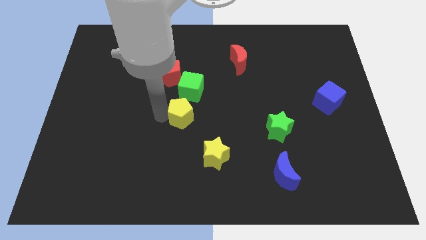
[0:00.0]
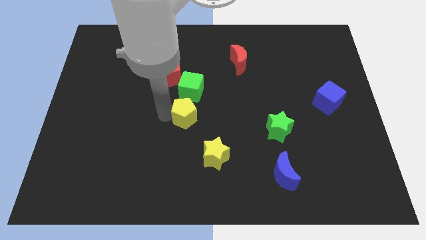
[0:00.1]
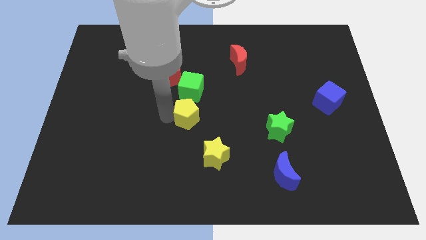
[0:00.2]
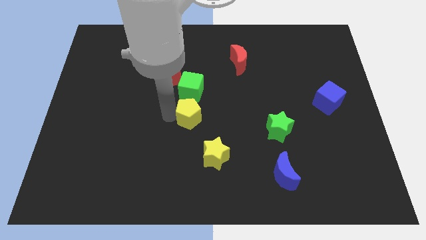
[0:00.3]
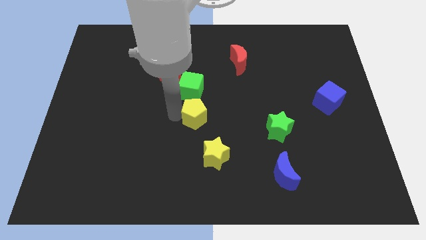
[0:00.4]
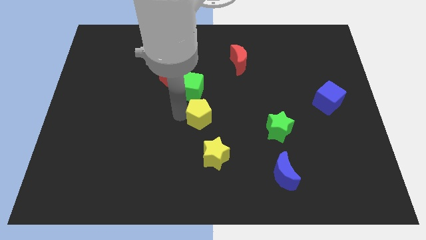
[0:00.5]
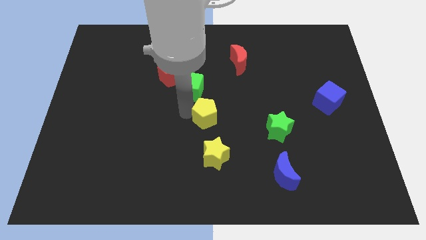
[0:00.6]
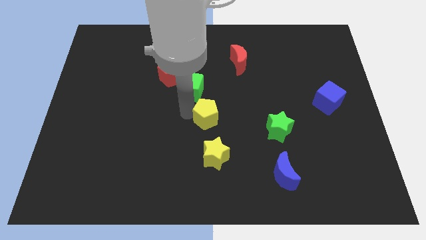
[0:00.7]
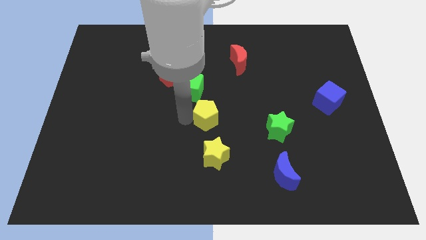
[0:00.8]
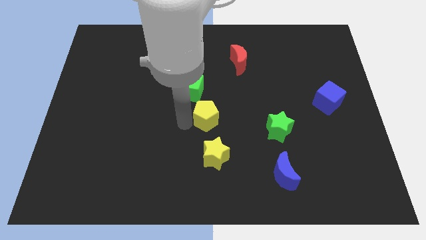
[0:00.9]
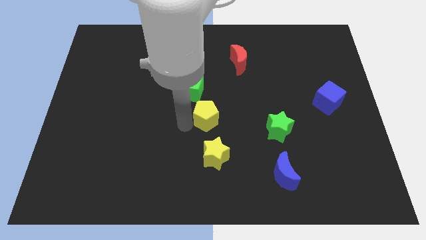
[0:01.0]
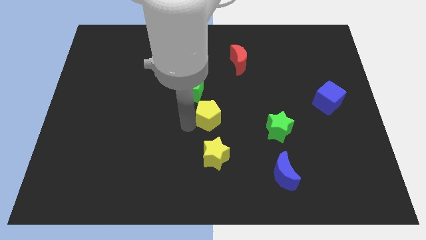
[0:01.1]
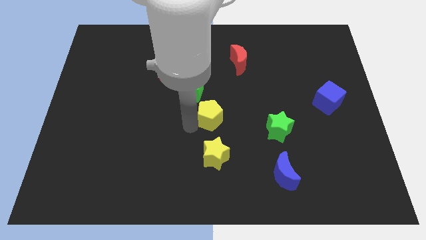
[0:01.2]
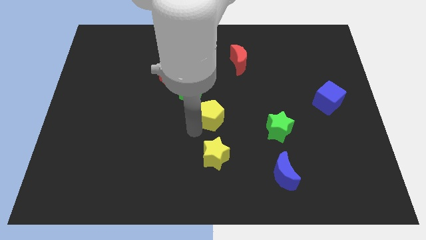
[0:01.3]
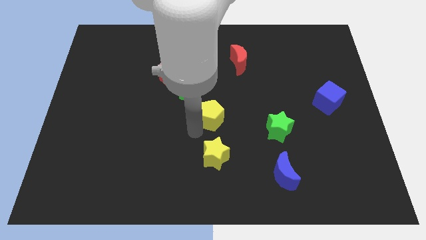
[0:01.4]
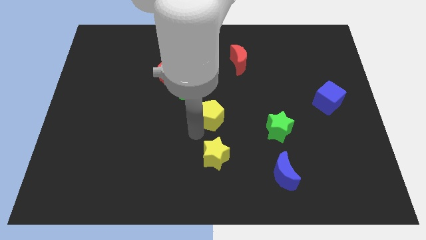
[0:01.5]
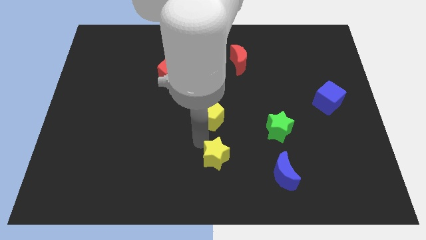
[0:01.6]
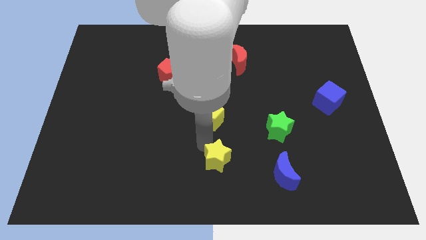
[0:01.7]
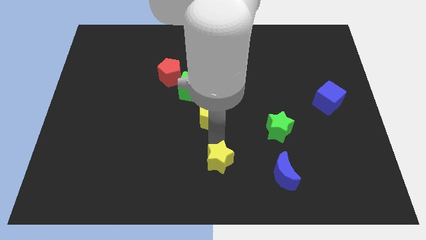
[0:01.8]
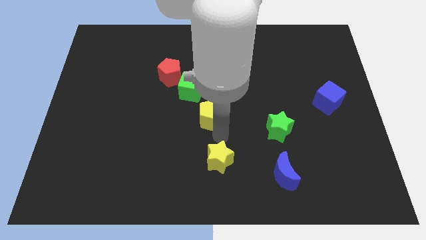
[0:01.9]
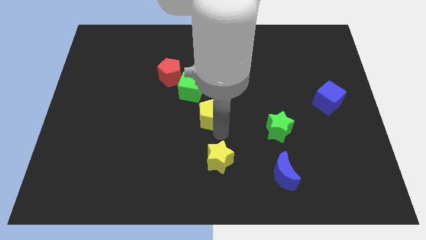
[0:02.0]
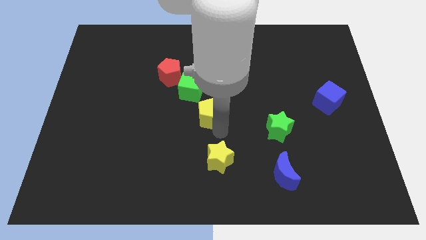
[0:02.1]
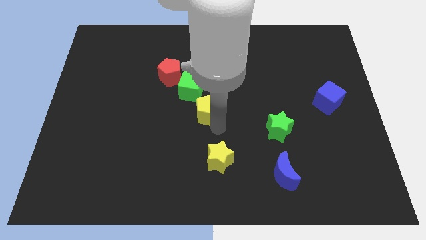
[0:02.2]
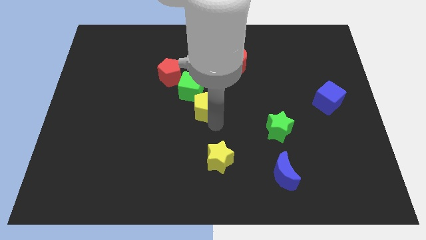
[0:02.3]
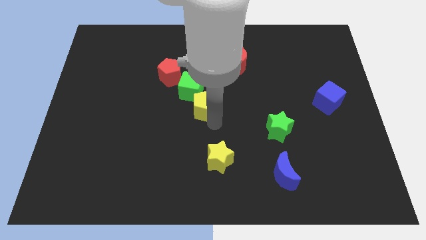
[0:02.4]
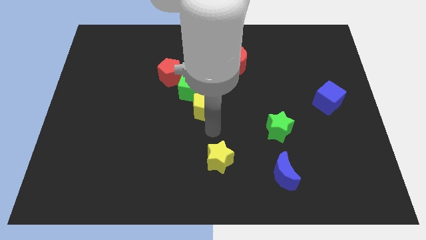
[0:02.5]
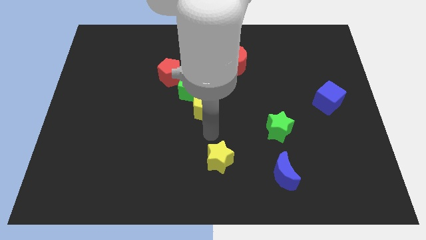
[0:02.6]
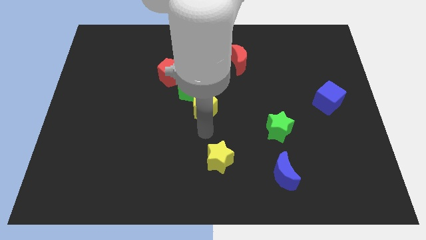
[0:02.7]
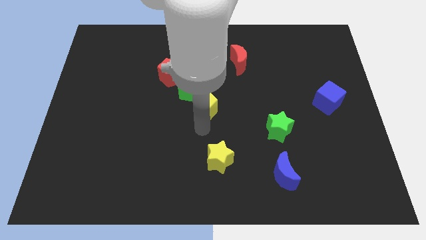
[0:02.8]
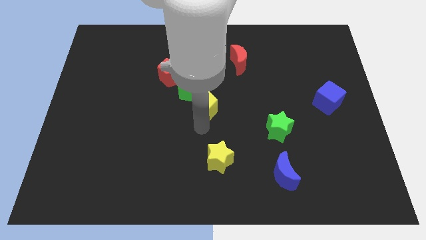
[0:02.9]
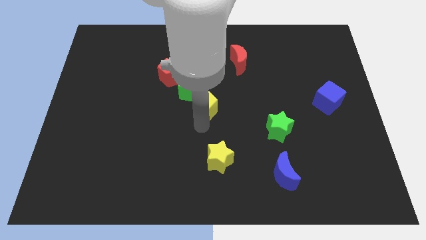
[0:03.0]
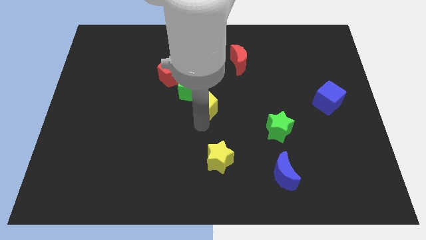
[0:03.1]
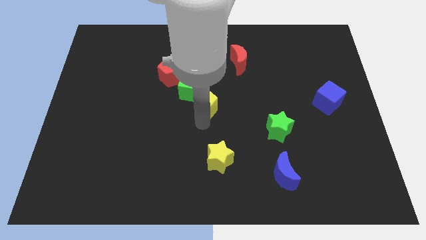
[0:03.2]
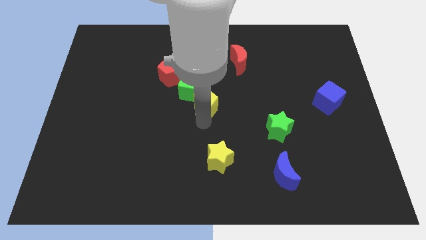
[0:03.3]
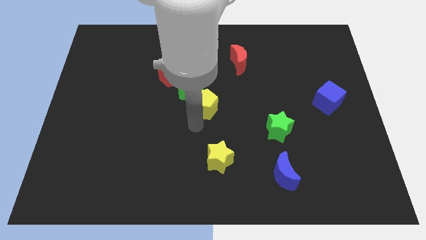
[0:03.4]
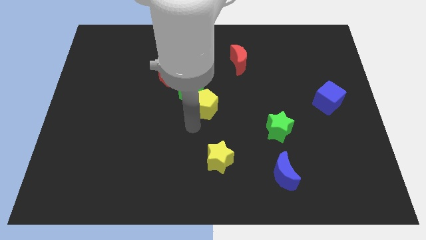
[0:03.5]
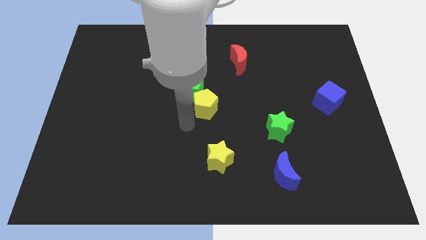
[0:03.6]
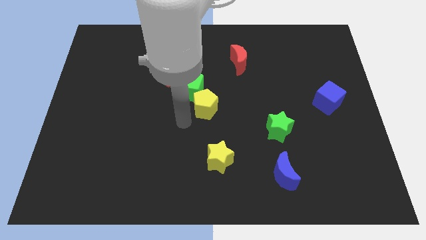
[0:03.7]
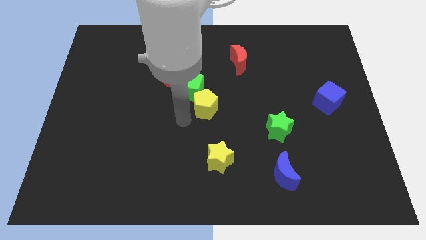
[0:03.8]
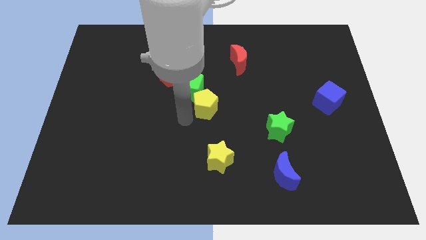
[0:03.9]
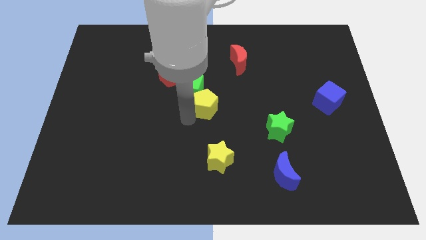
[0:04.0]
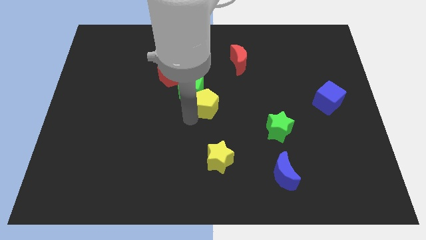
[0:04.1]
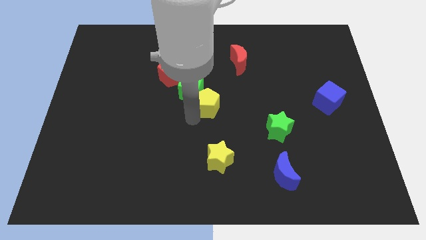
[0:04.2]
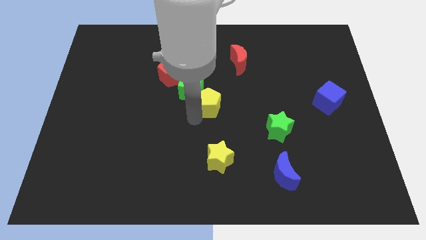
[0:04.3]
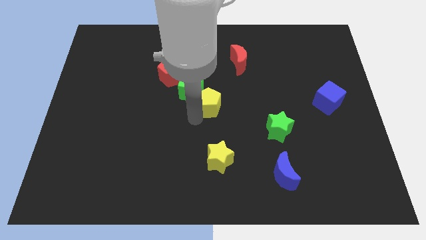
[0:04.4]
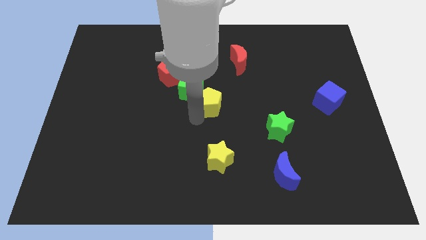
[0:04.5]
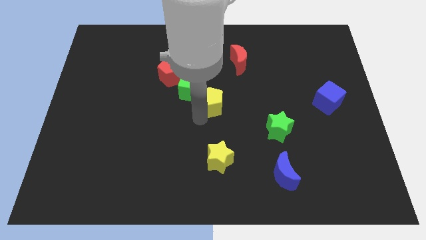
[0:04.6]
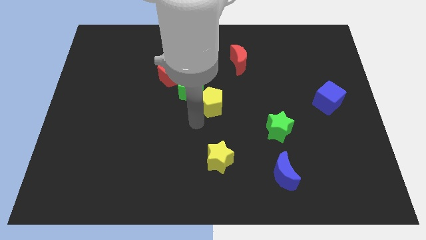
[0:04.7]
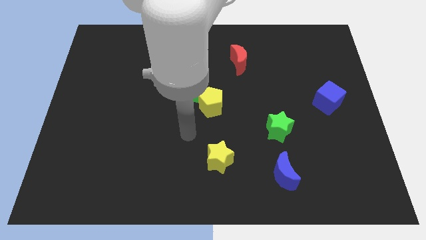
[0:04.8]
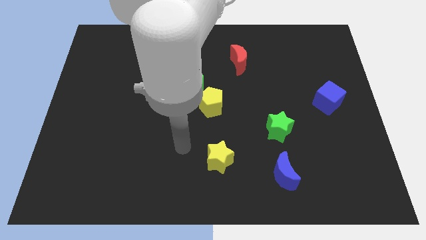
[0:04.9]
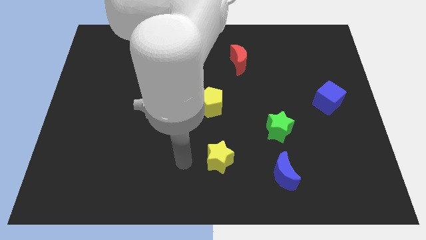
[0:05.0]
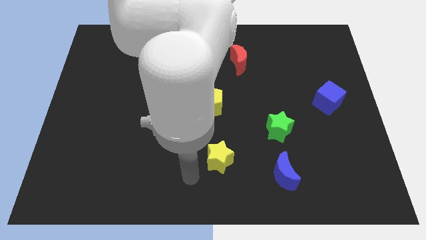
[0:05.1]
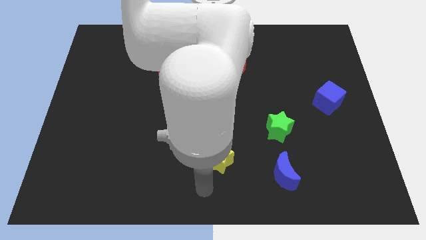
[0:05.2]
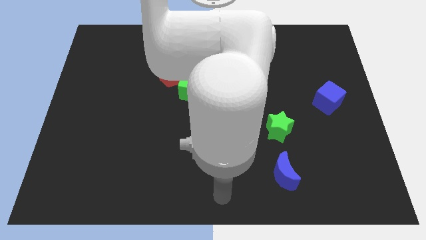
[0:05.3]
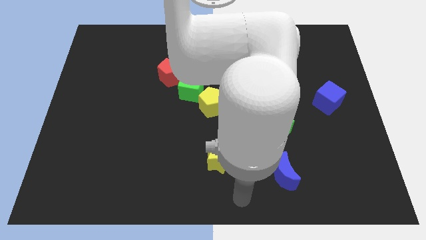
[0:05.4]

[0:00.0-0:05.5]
place the yellow pentagon to the right of the green cube

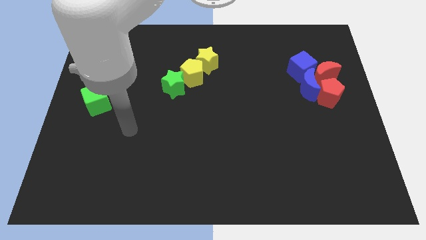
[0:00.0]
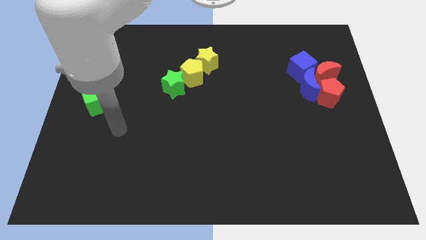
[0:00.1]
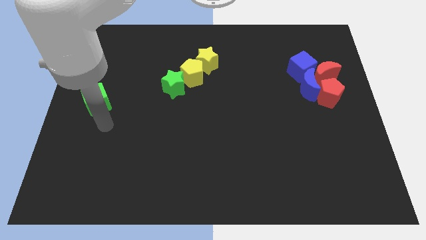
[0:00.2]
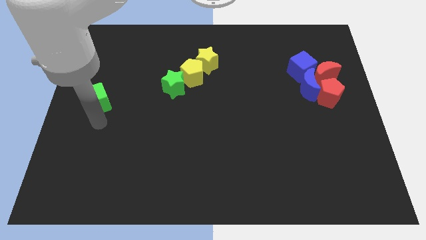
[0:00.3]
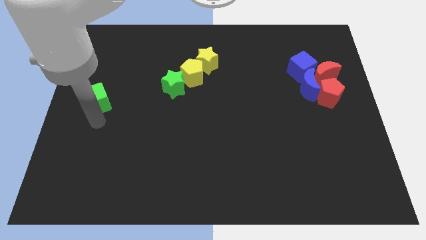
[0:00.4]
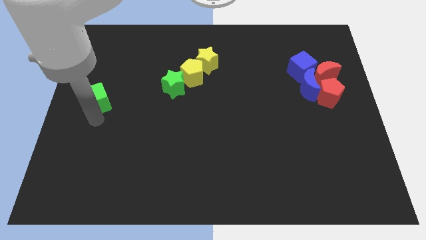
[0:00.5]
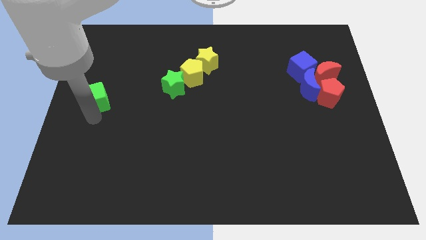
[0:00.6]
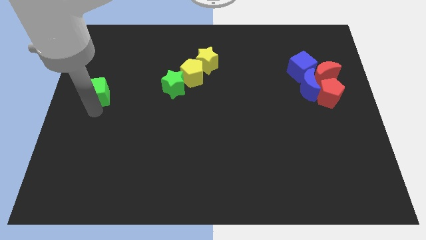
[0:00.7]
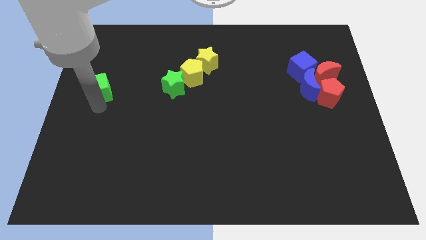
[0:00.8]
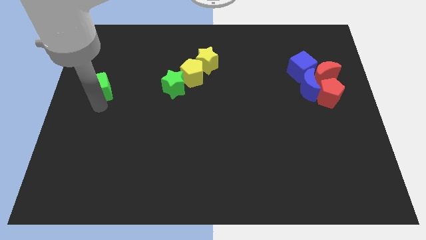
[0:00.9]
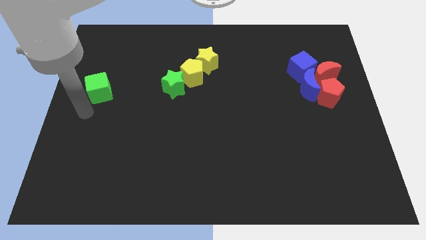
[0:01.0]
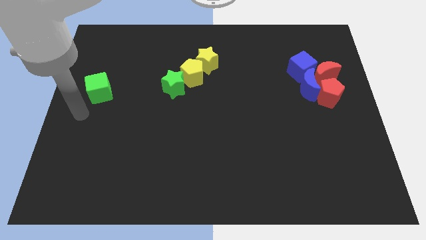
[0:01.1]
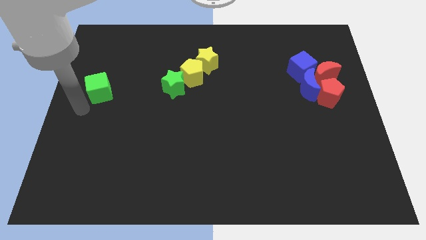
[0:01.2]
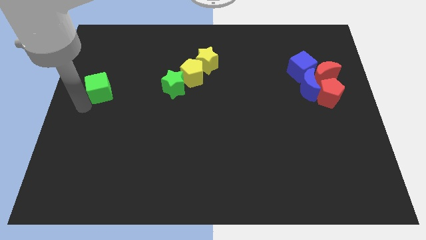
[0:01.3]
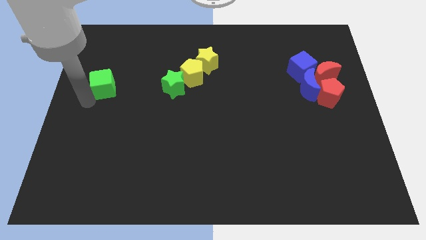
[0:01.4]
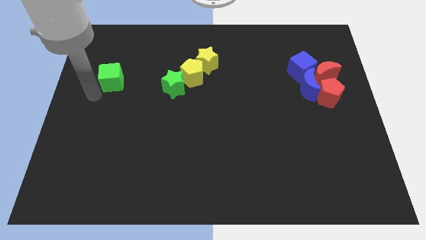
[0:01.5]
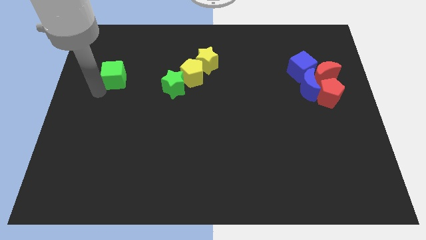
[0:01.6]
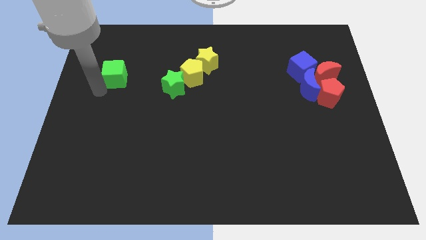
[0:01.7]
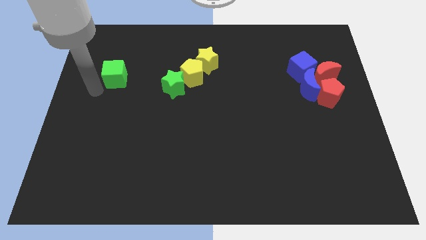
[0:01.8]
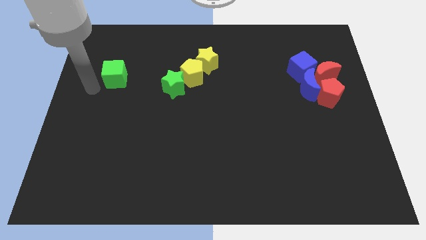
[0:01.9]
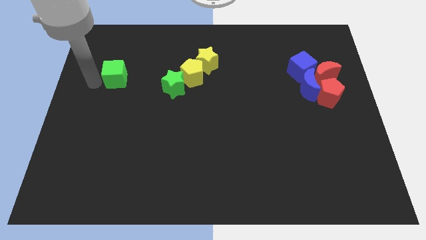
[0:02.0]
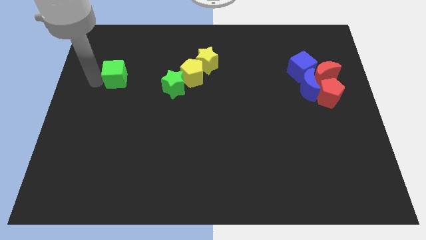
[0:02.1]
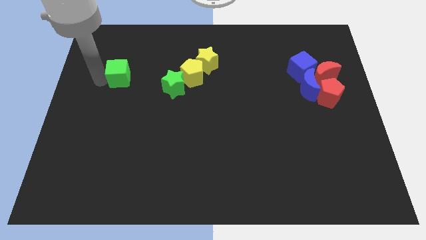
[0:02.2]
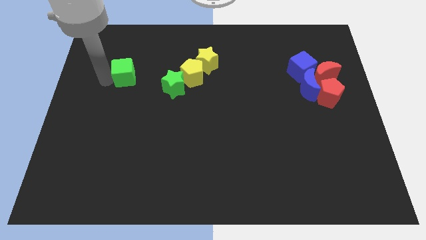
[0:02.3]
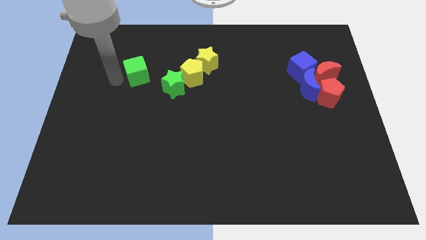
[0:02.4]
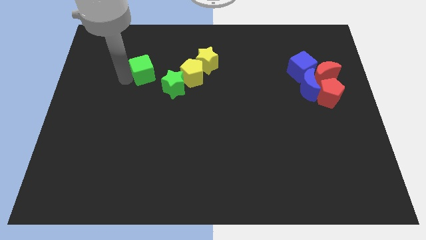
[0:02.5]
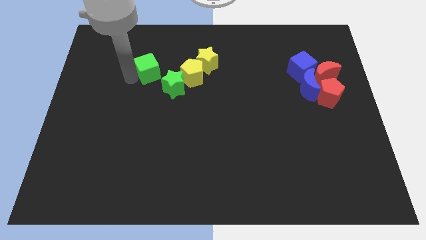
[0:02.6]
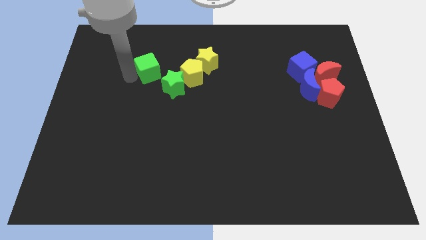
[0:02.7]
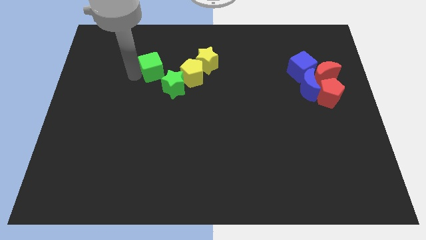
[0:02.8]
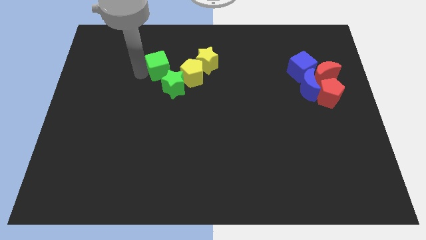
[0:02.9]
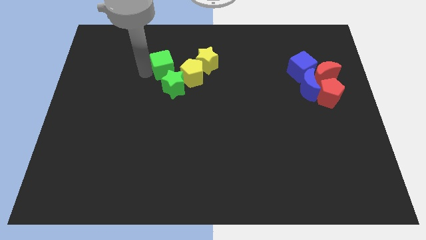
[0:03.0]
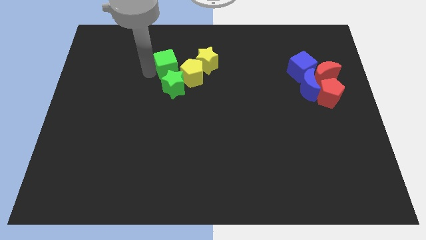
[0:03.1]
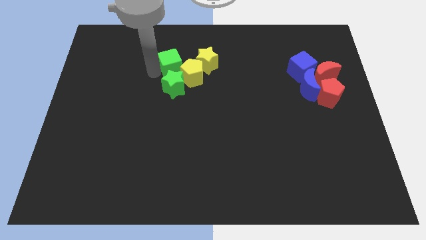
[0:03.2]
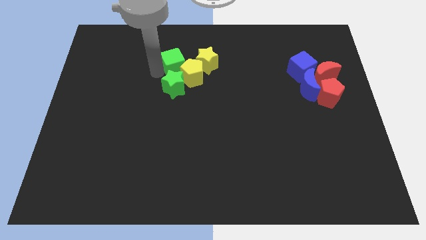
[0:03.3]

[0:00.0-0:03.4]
drag the green cube to the top left of the yellow pentagon

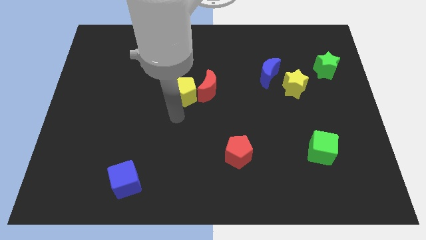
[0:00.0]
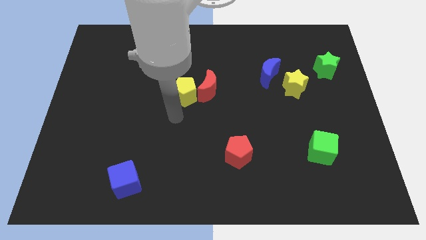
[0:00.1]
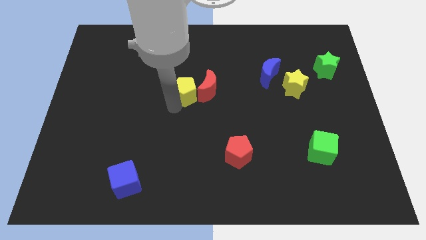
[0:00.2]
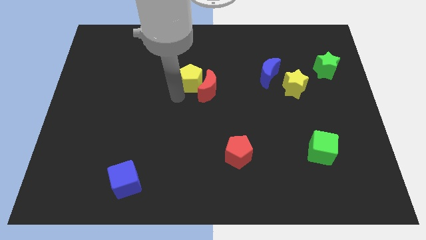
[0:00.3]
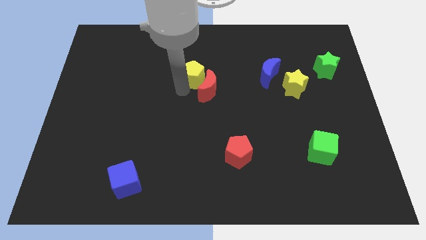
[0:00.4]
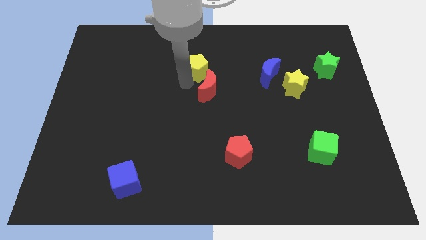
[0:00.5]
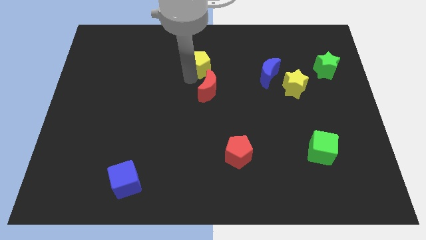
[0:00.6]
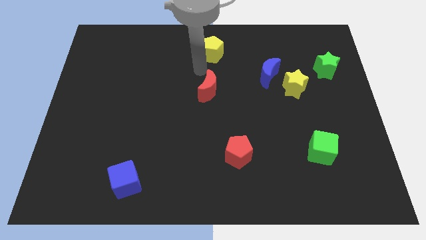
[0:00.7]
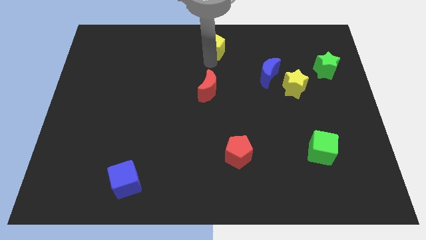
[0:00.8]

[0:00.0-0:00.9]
push yellow pentagon to the top
